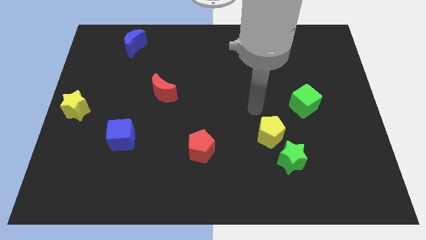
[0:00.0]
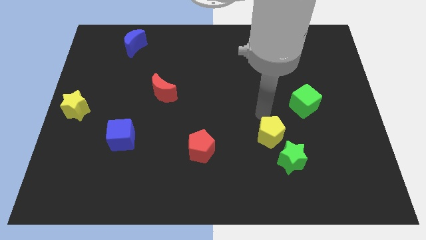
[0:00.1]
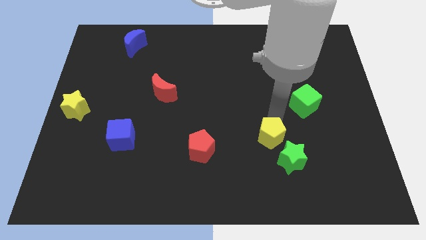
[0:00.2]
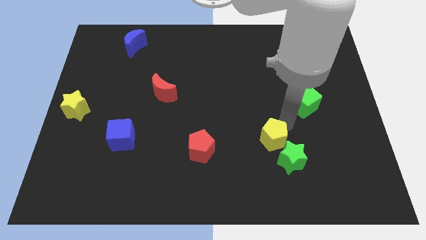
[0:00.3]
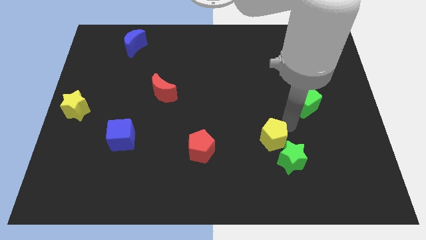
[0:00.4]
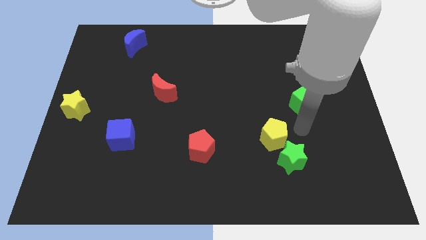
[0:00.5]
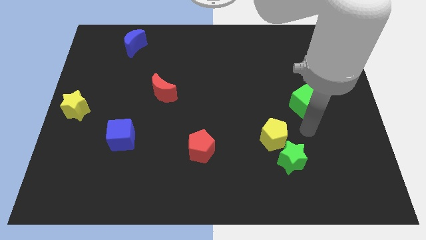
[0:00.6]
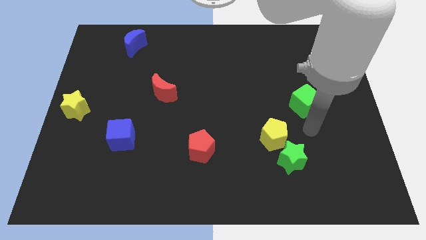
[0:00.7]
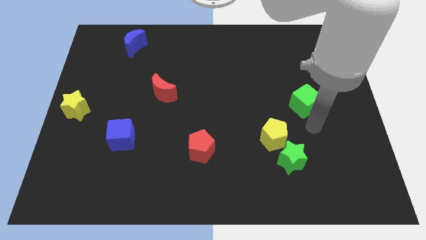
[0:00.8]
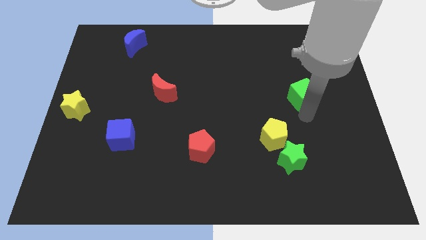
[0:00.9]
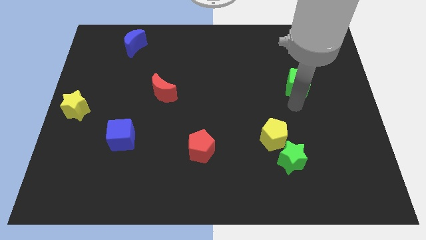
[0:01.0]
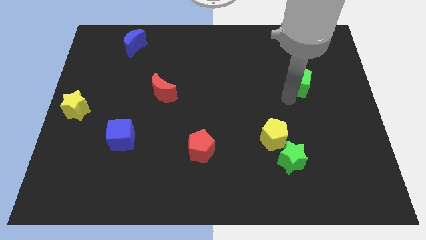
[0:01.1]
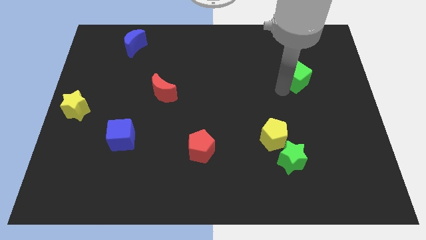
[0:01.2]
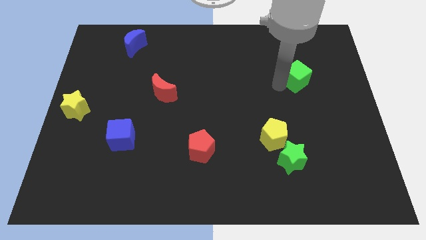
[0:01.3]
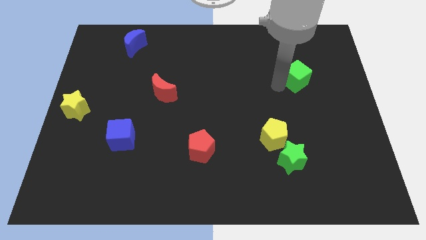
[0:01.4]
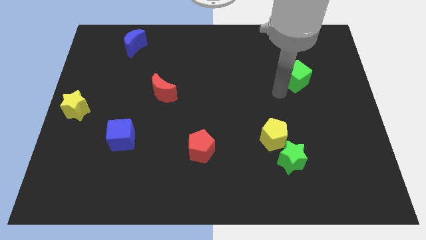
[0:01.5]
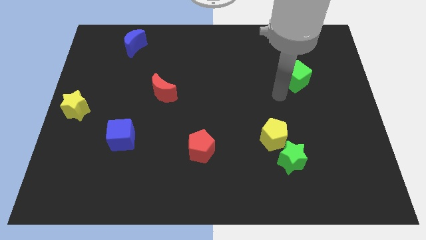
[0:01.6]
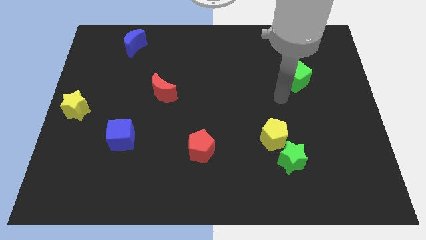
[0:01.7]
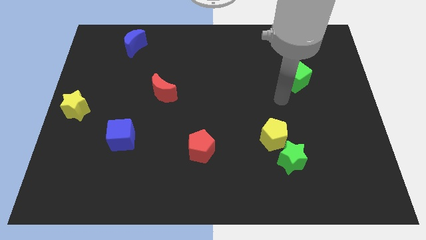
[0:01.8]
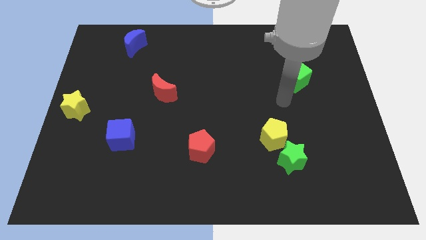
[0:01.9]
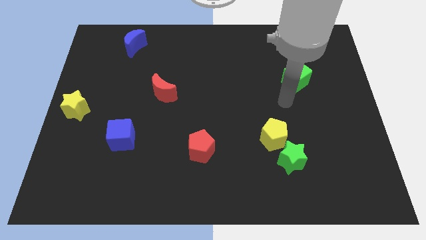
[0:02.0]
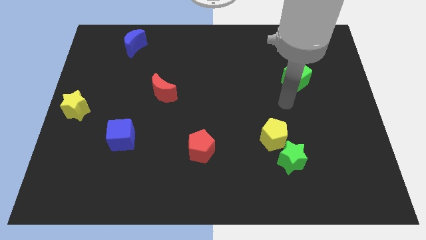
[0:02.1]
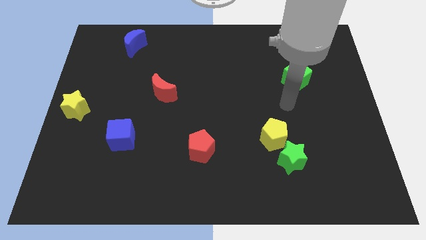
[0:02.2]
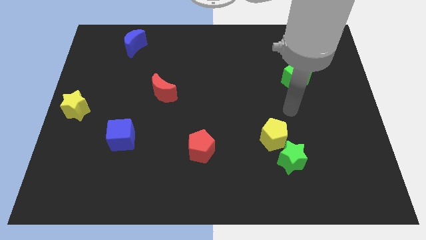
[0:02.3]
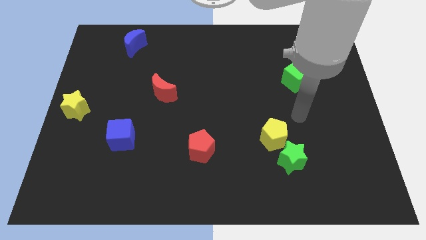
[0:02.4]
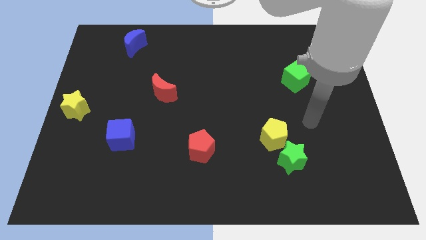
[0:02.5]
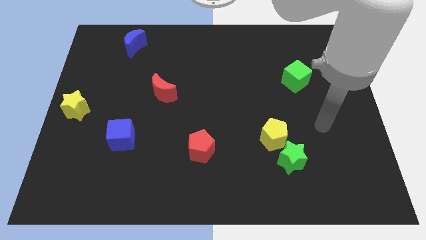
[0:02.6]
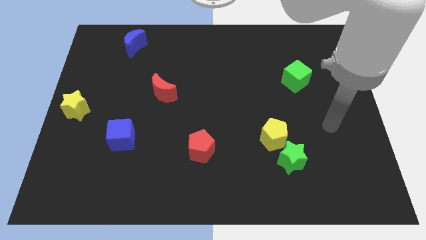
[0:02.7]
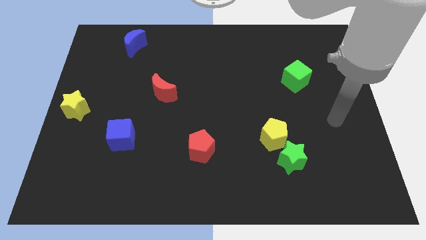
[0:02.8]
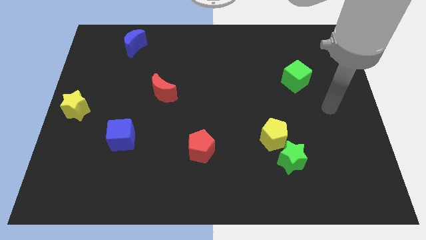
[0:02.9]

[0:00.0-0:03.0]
push the green cube slightly to the up

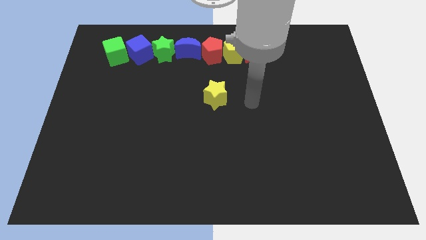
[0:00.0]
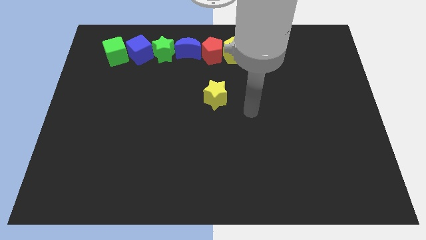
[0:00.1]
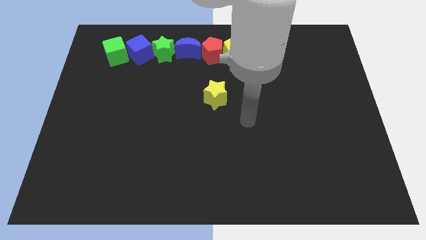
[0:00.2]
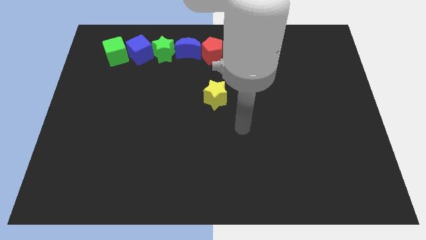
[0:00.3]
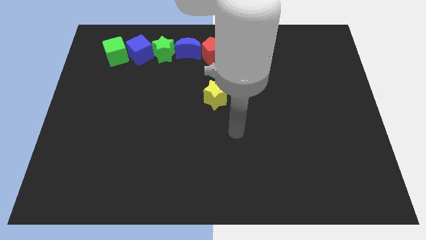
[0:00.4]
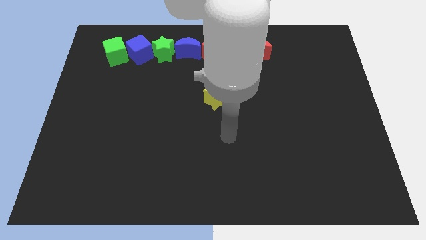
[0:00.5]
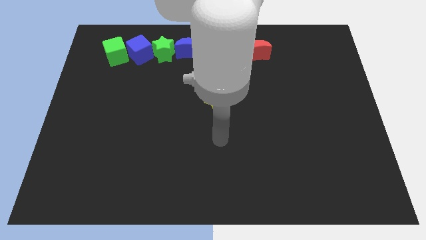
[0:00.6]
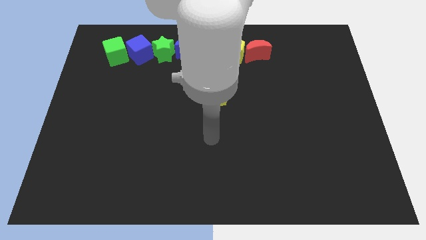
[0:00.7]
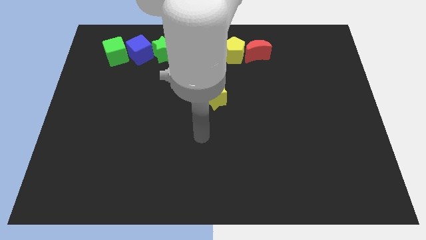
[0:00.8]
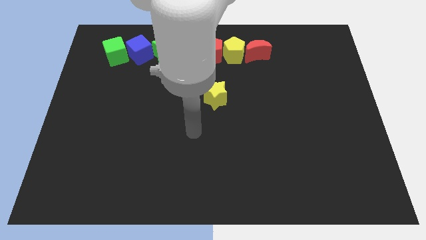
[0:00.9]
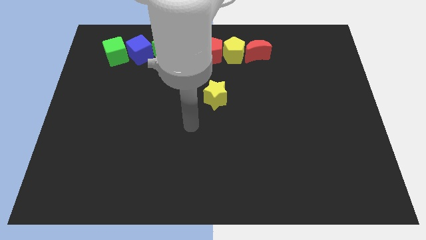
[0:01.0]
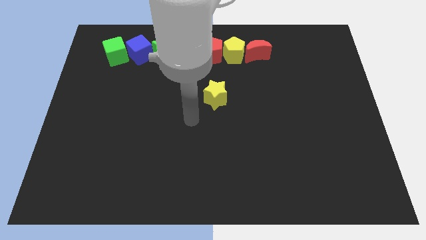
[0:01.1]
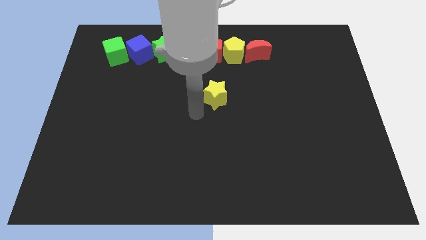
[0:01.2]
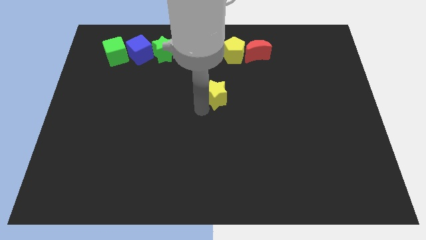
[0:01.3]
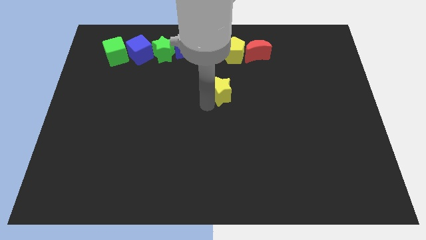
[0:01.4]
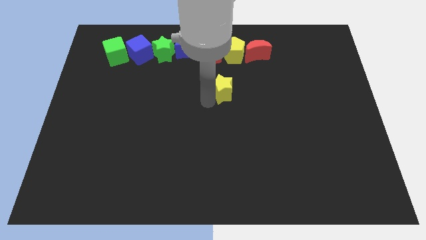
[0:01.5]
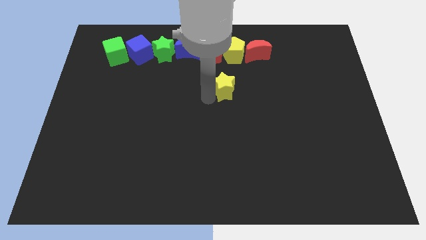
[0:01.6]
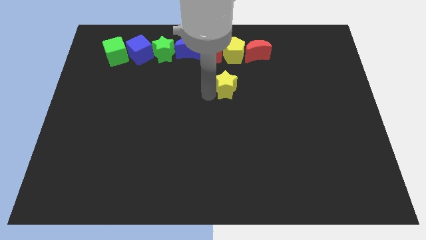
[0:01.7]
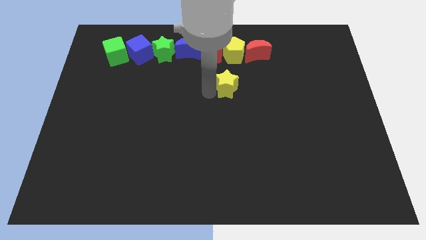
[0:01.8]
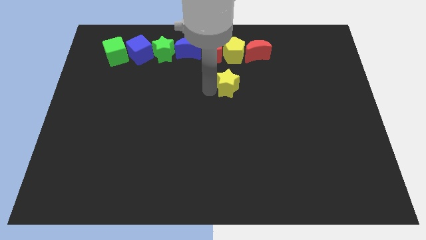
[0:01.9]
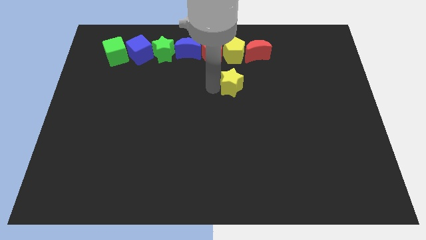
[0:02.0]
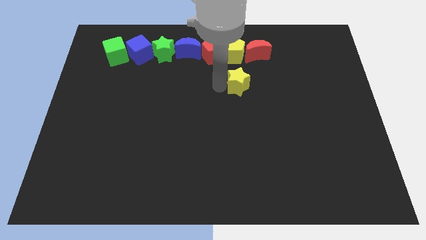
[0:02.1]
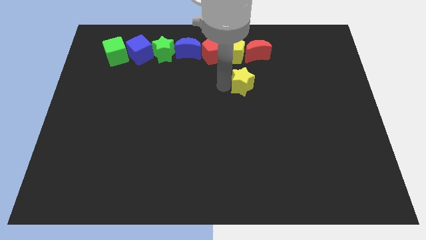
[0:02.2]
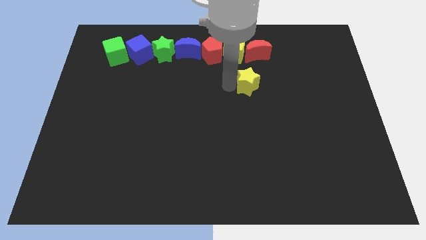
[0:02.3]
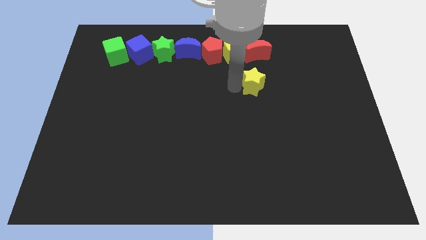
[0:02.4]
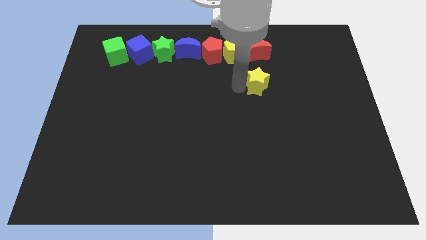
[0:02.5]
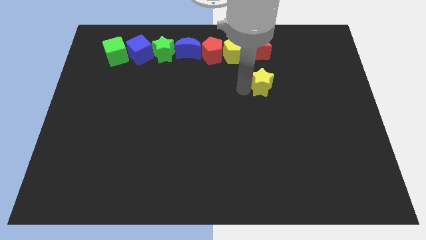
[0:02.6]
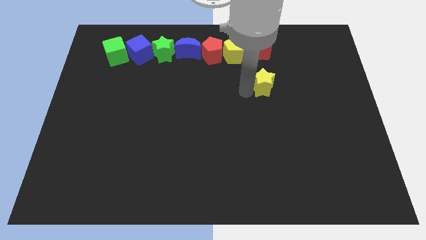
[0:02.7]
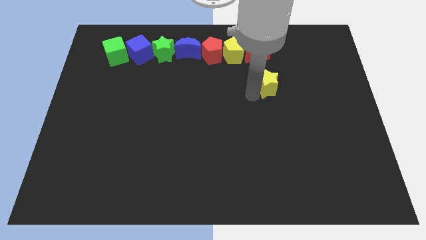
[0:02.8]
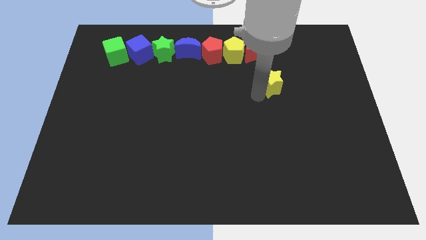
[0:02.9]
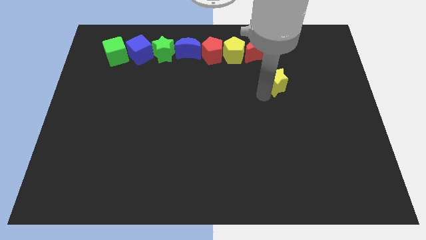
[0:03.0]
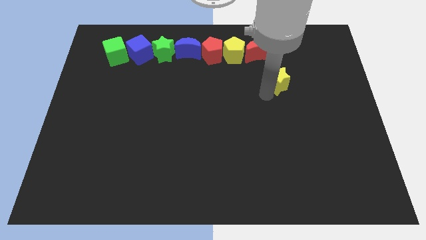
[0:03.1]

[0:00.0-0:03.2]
move yellow star diagonal bottom right to the red crescent

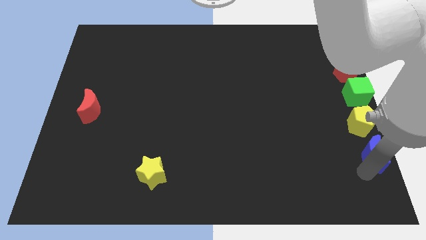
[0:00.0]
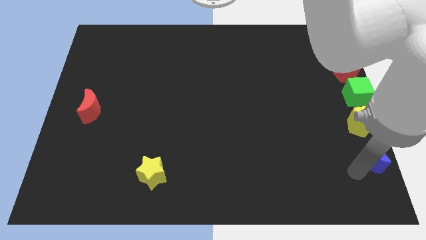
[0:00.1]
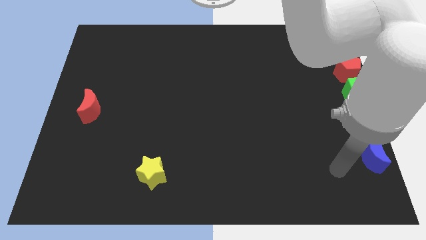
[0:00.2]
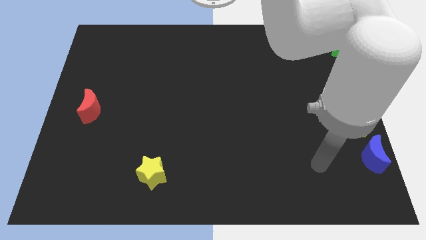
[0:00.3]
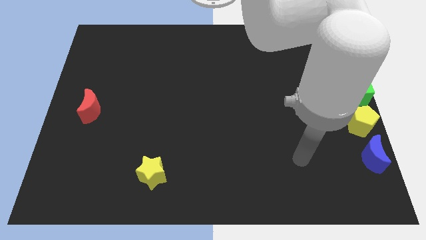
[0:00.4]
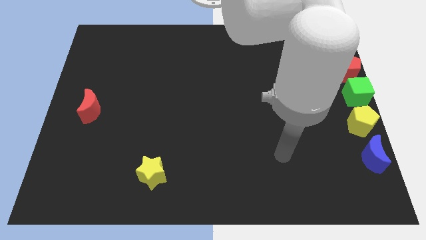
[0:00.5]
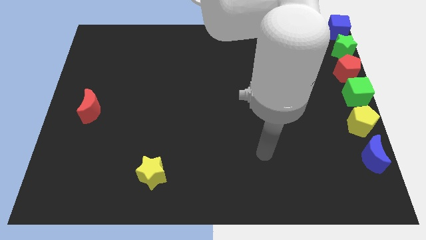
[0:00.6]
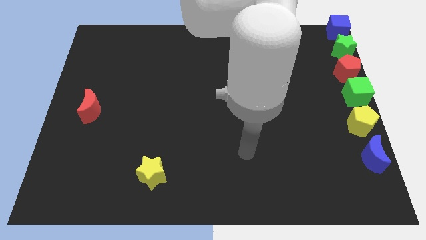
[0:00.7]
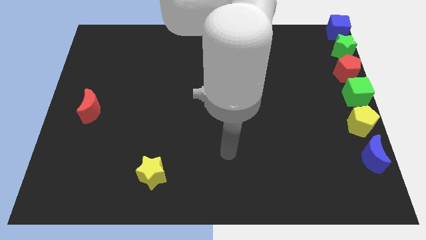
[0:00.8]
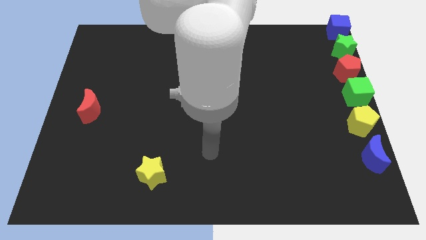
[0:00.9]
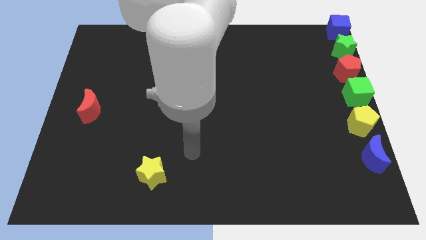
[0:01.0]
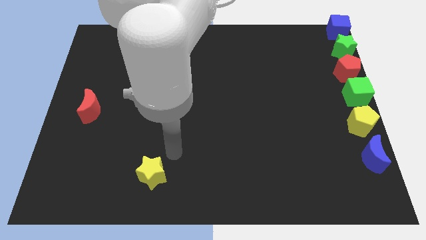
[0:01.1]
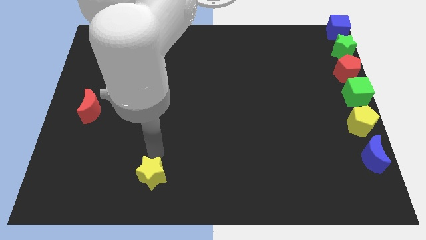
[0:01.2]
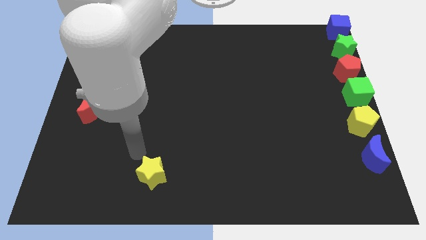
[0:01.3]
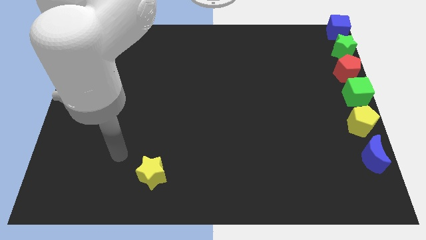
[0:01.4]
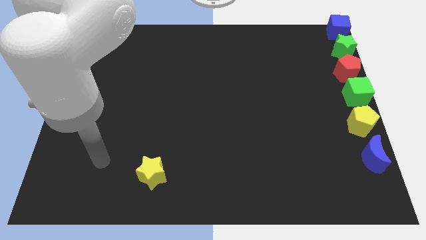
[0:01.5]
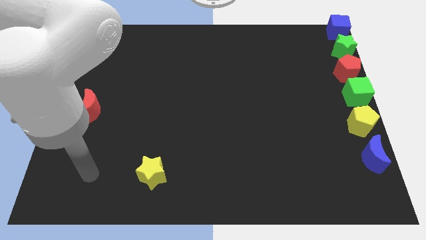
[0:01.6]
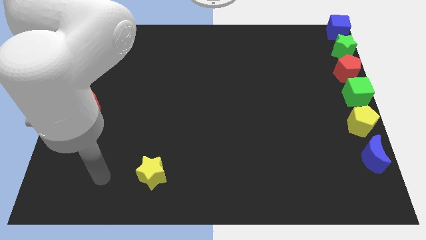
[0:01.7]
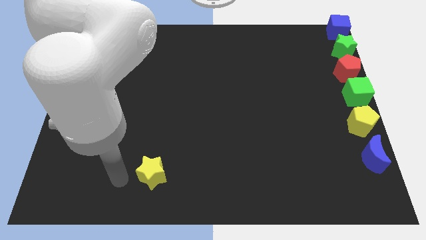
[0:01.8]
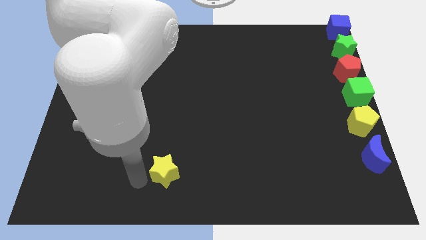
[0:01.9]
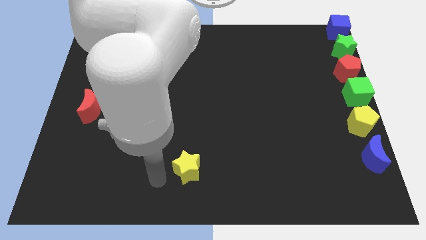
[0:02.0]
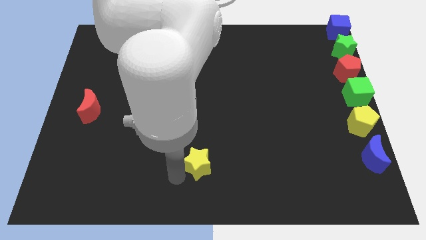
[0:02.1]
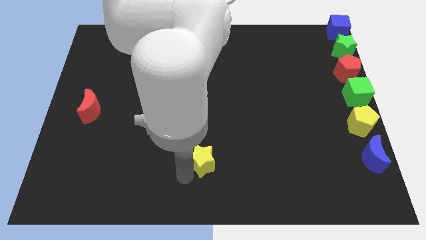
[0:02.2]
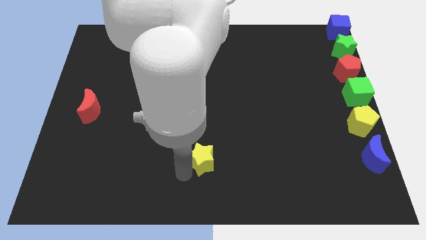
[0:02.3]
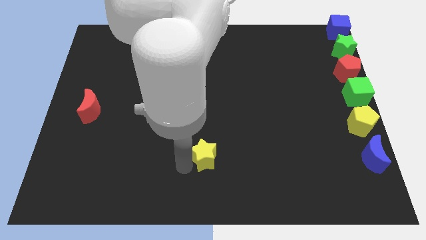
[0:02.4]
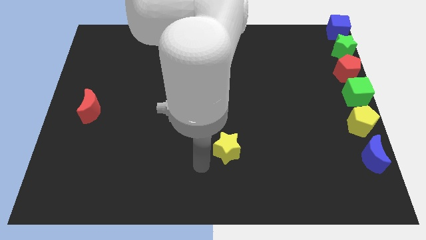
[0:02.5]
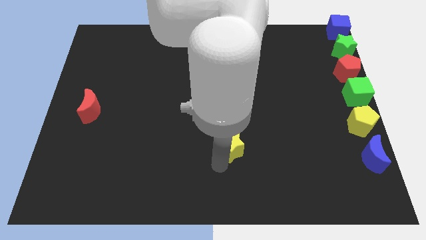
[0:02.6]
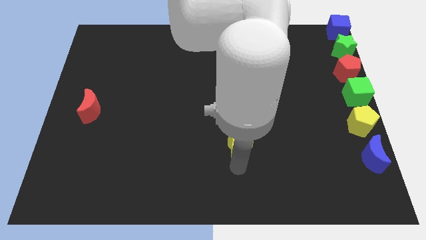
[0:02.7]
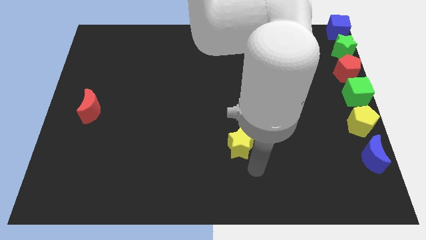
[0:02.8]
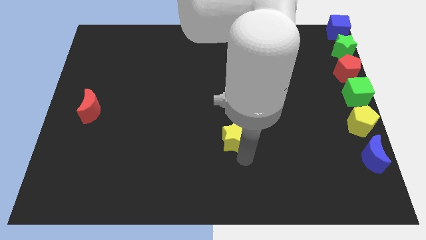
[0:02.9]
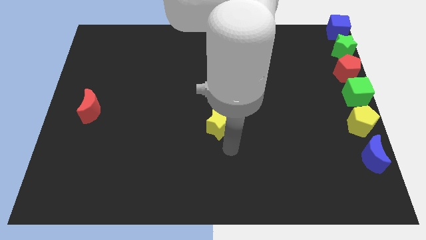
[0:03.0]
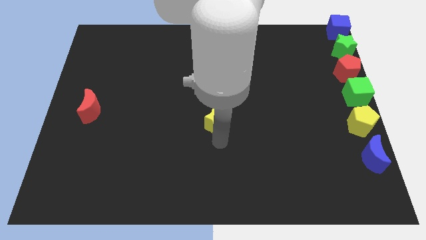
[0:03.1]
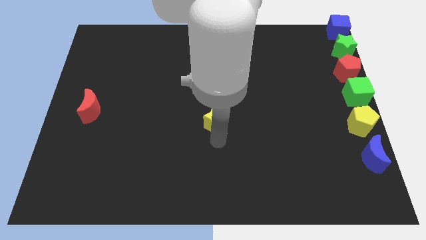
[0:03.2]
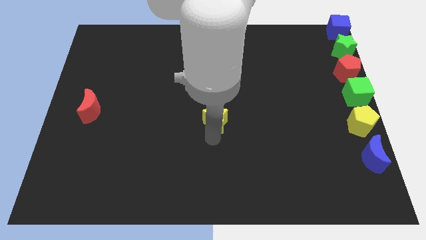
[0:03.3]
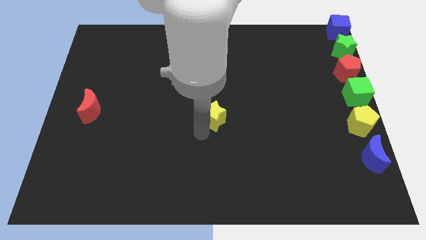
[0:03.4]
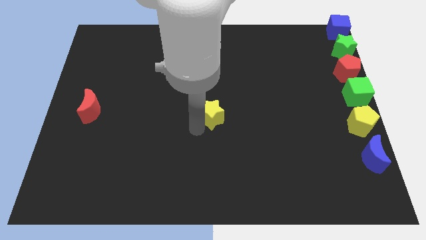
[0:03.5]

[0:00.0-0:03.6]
place the yellow star left to the yellow pentagon
